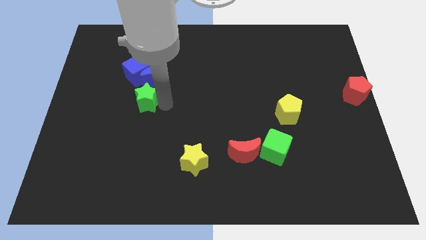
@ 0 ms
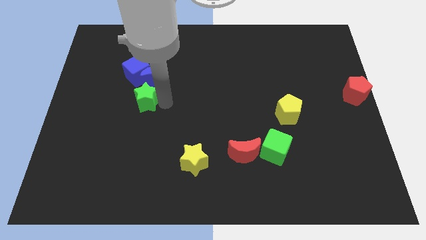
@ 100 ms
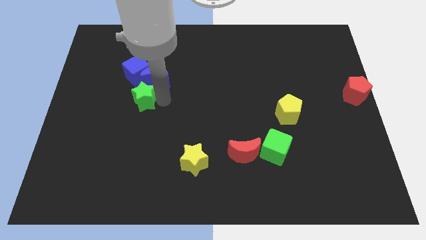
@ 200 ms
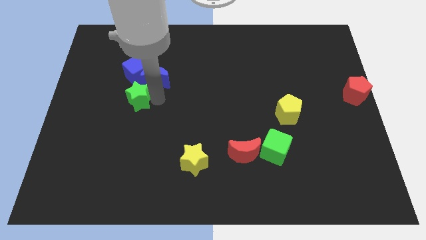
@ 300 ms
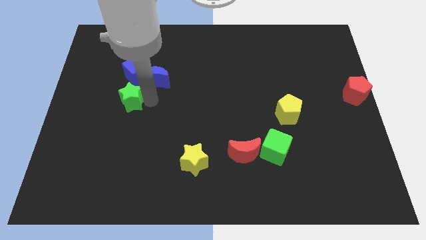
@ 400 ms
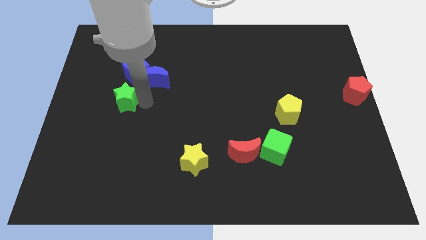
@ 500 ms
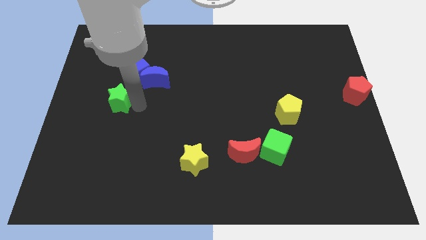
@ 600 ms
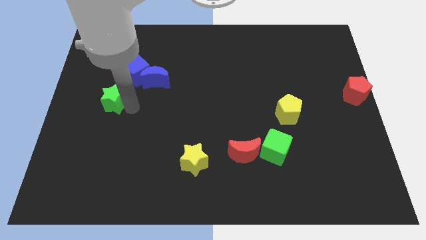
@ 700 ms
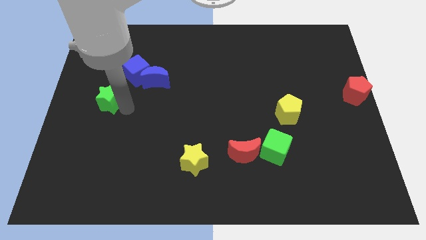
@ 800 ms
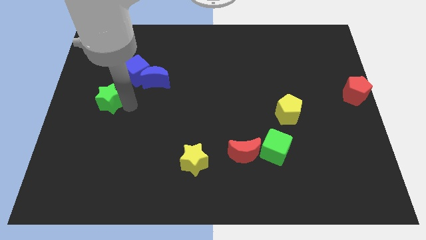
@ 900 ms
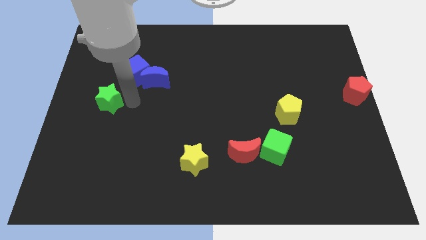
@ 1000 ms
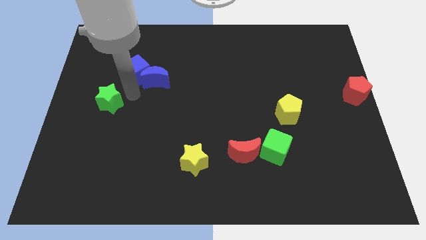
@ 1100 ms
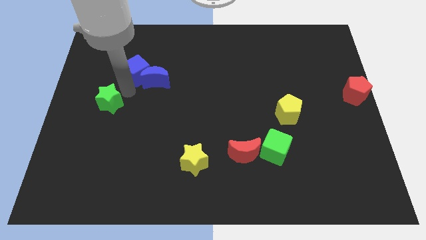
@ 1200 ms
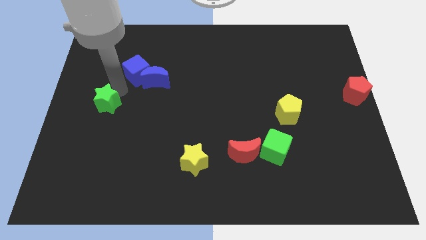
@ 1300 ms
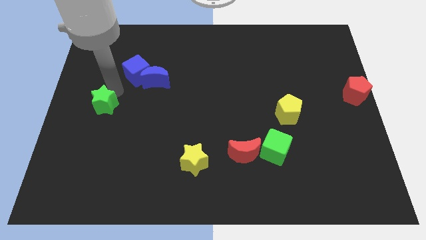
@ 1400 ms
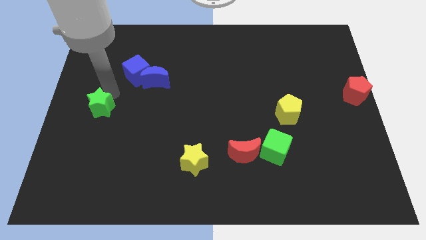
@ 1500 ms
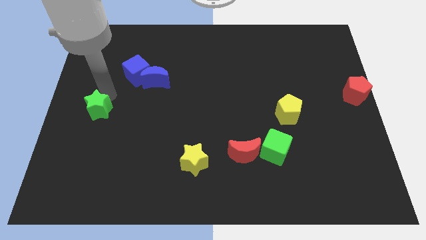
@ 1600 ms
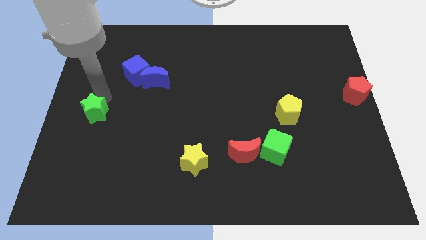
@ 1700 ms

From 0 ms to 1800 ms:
push the green star to the bottom left of the blue cube

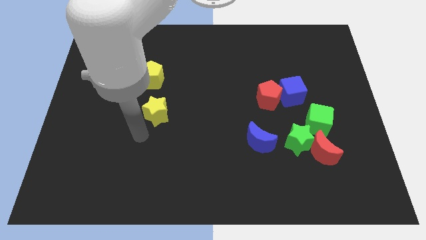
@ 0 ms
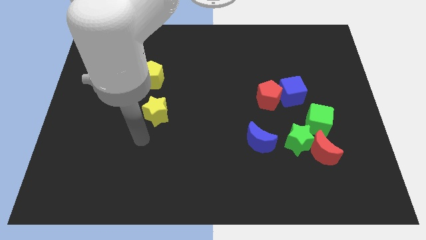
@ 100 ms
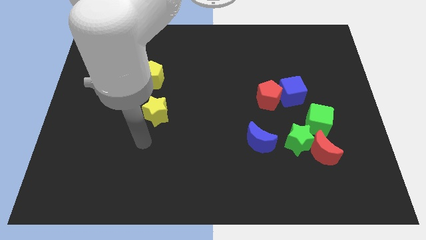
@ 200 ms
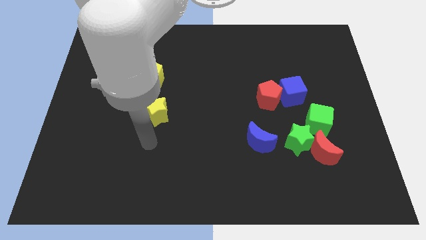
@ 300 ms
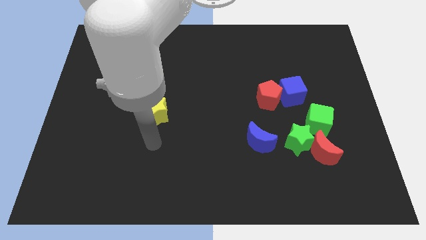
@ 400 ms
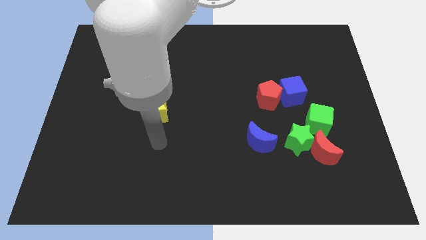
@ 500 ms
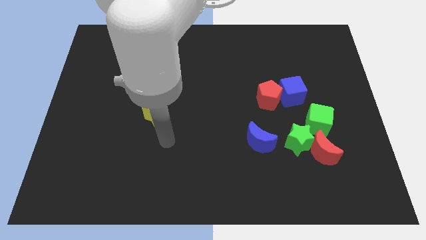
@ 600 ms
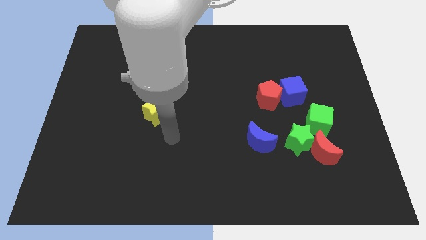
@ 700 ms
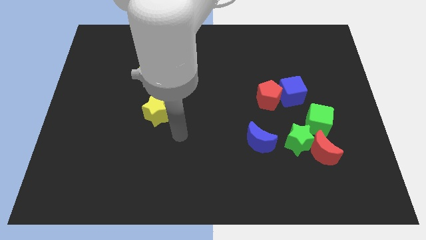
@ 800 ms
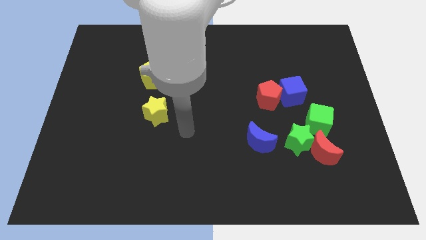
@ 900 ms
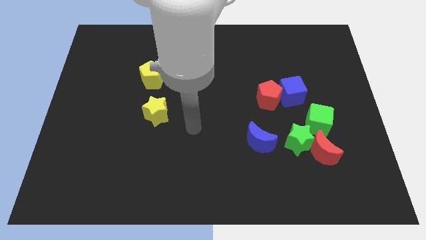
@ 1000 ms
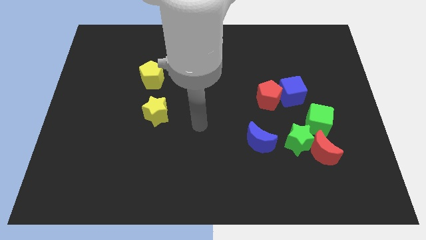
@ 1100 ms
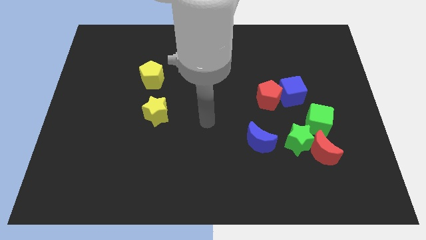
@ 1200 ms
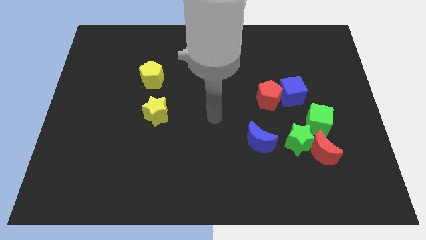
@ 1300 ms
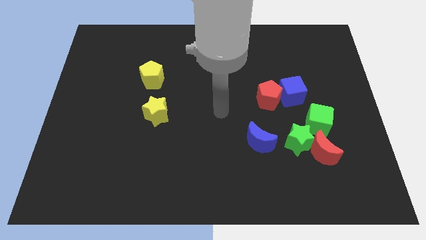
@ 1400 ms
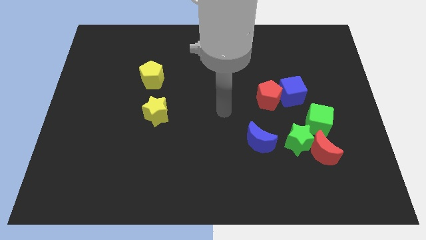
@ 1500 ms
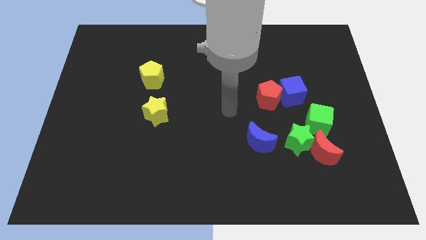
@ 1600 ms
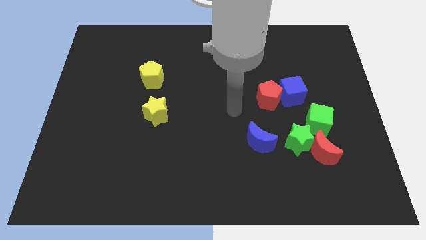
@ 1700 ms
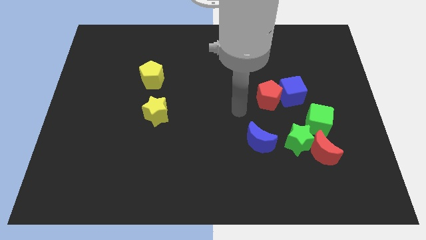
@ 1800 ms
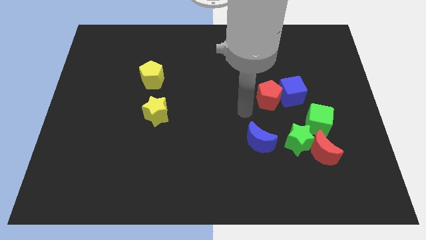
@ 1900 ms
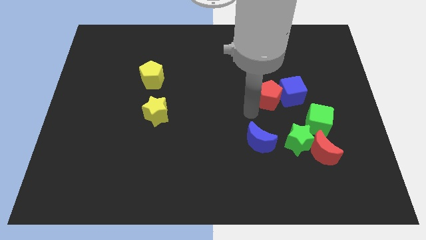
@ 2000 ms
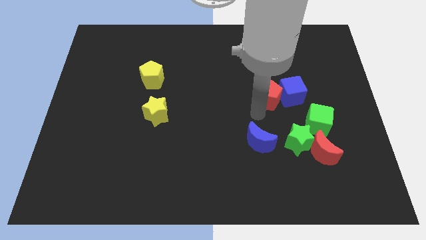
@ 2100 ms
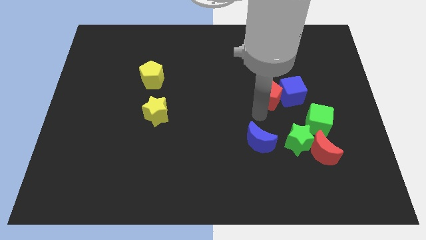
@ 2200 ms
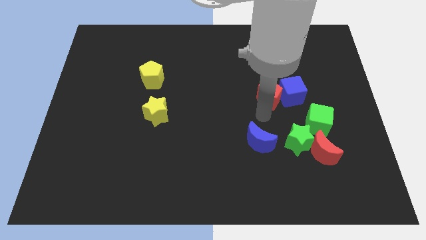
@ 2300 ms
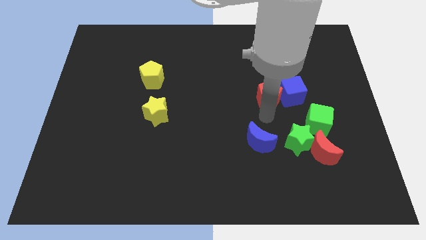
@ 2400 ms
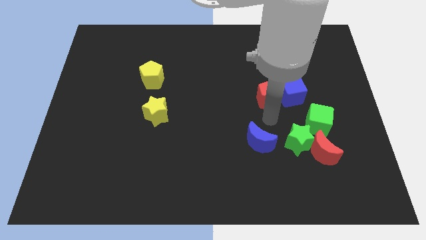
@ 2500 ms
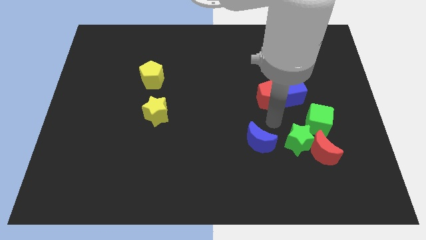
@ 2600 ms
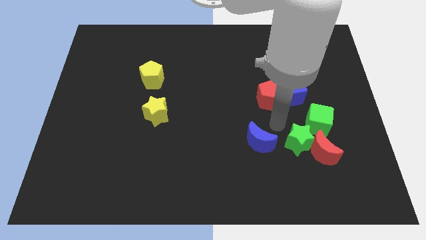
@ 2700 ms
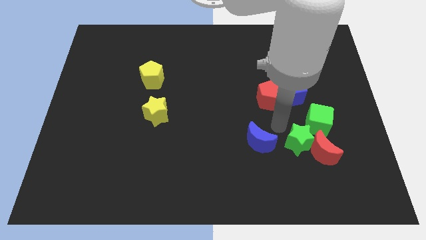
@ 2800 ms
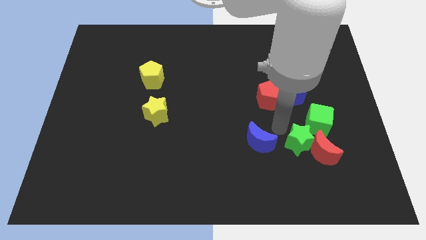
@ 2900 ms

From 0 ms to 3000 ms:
move your arm away from the yellow star

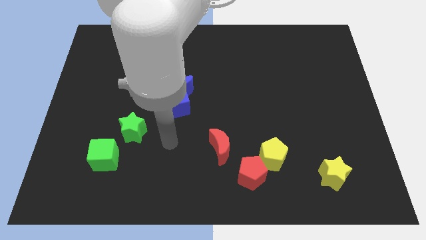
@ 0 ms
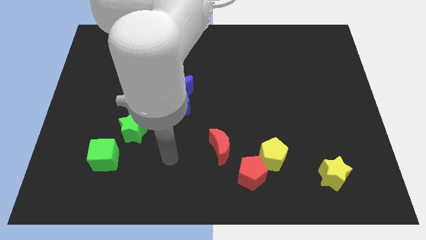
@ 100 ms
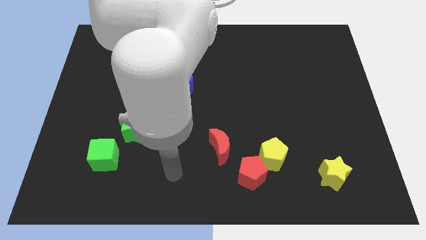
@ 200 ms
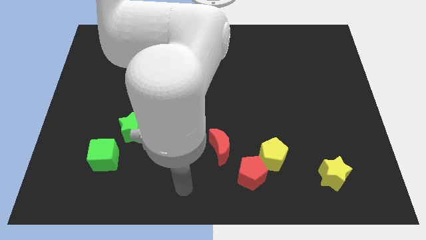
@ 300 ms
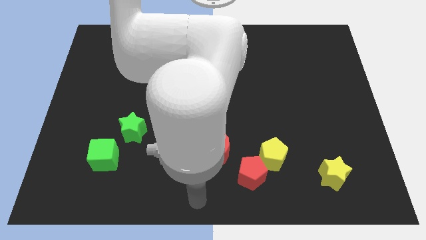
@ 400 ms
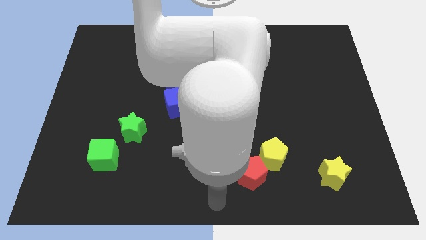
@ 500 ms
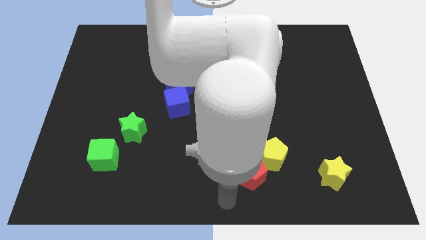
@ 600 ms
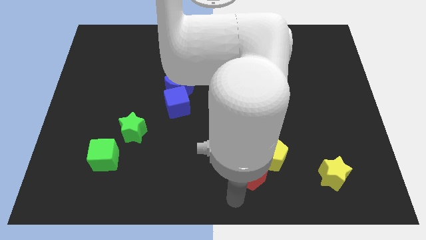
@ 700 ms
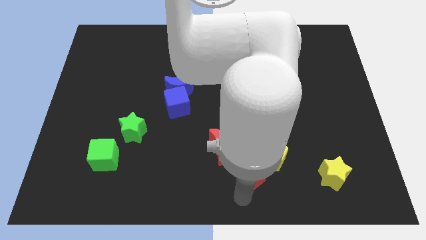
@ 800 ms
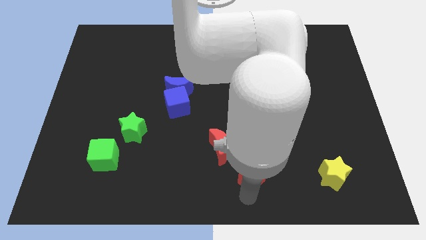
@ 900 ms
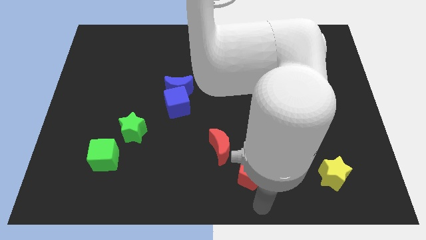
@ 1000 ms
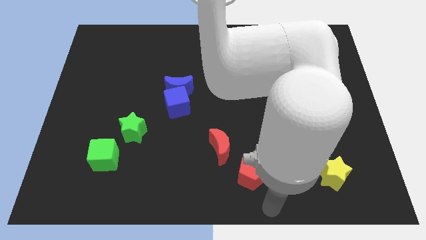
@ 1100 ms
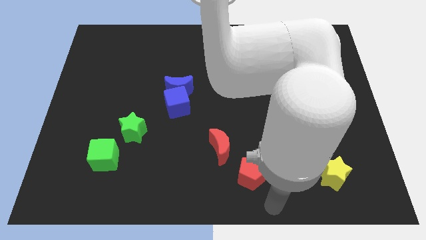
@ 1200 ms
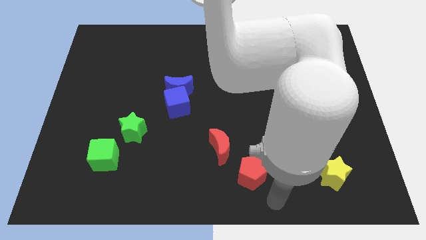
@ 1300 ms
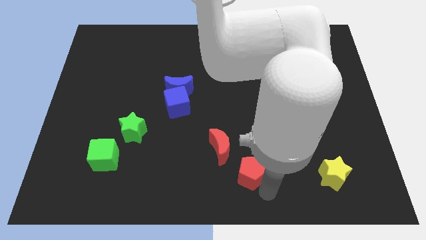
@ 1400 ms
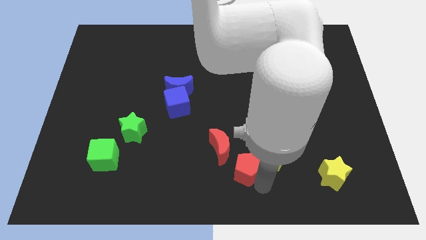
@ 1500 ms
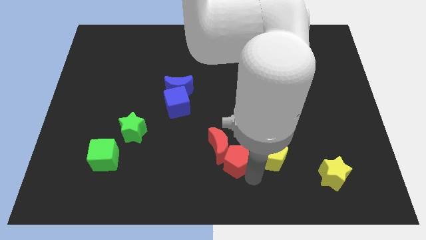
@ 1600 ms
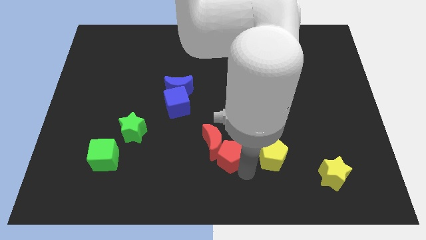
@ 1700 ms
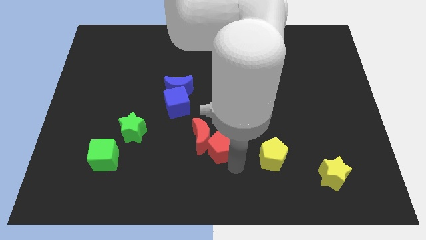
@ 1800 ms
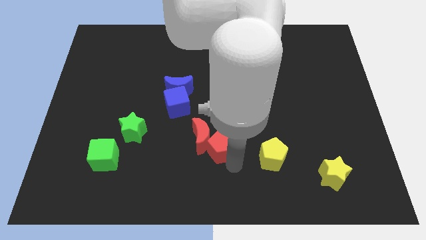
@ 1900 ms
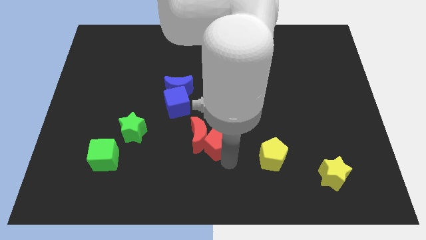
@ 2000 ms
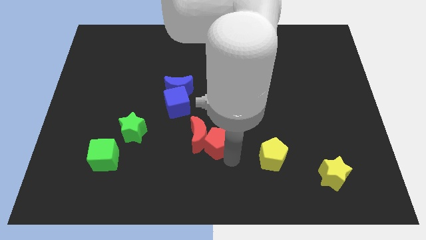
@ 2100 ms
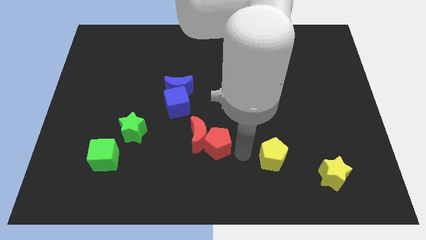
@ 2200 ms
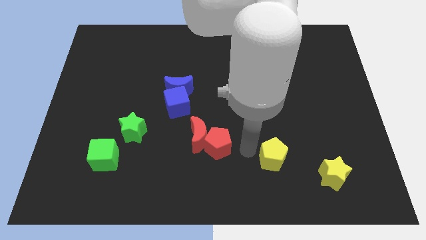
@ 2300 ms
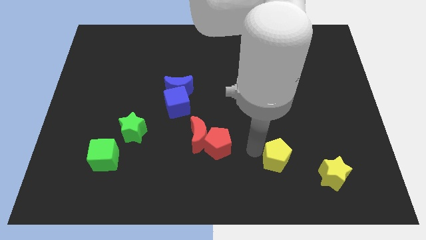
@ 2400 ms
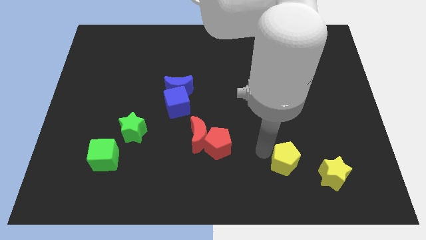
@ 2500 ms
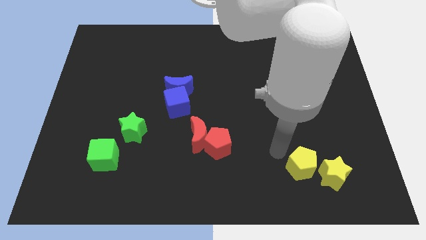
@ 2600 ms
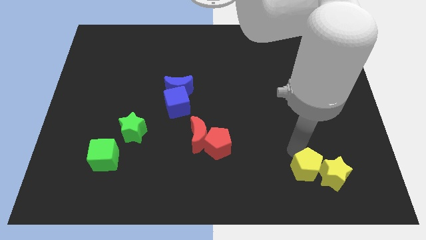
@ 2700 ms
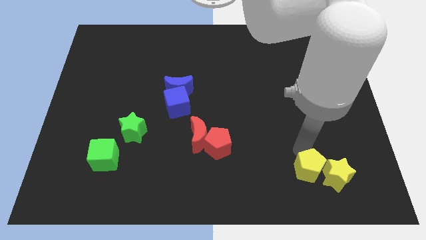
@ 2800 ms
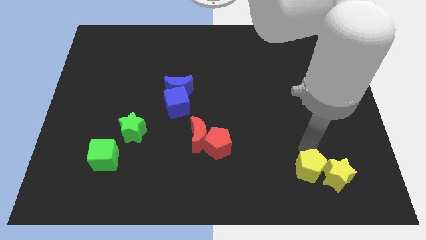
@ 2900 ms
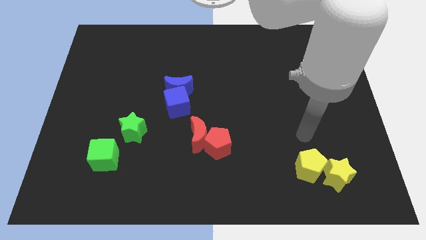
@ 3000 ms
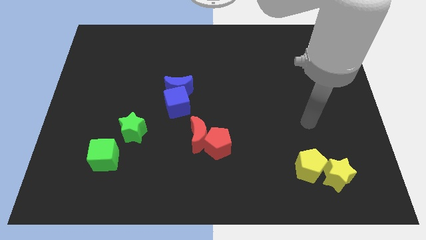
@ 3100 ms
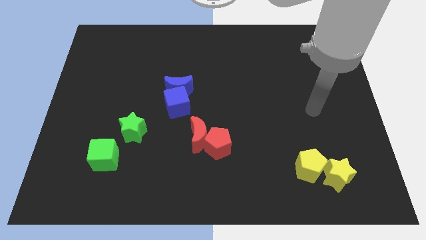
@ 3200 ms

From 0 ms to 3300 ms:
separate the red pentagon and yellow pentagon from each other

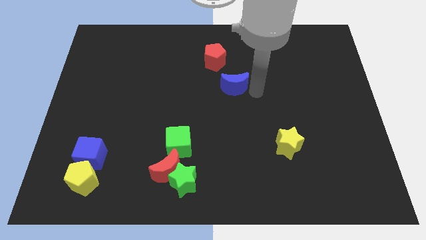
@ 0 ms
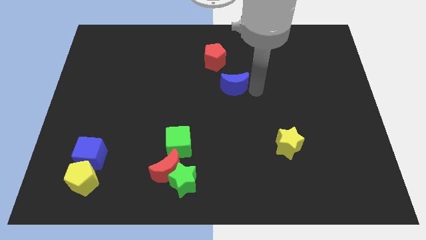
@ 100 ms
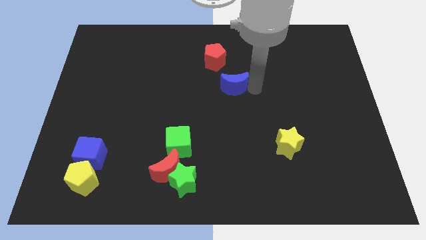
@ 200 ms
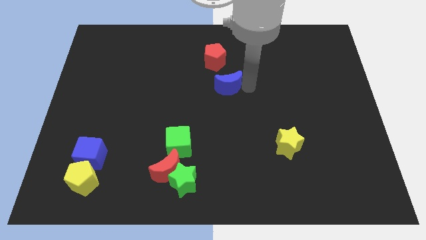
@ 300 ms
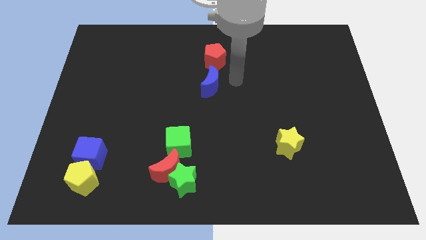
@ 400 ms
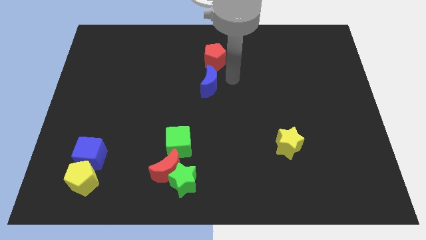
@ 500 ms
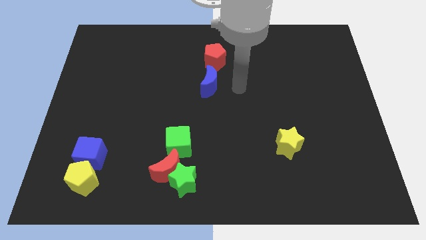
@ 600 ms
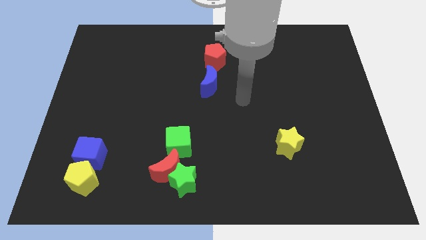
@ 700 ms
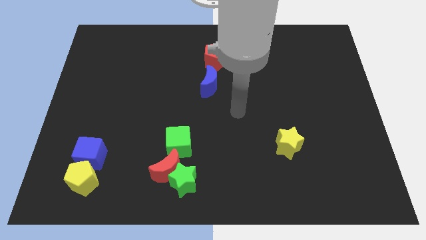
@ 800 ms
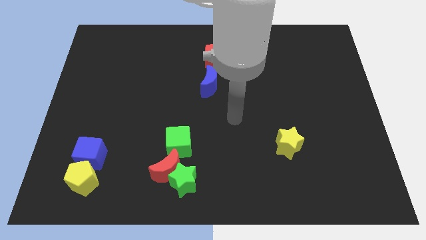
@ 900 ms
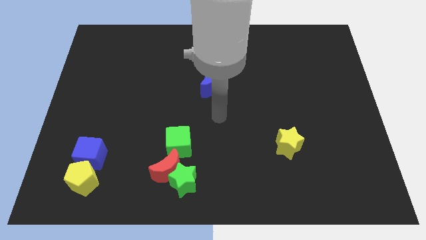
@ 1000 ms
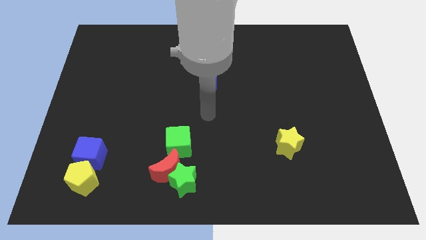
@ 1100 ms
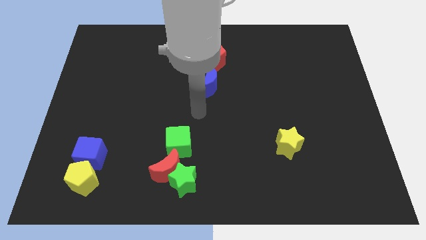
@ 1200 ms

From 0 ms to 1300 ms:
place blue moon at the bottom of red pentagon
